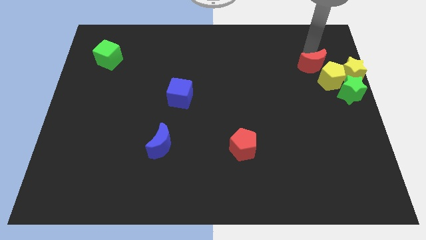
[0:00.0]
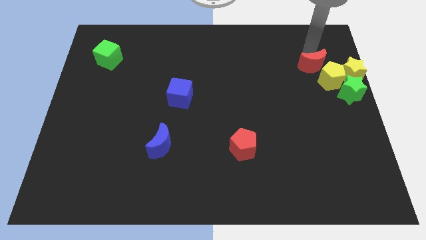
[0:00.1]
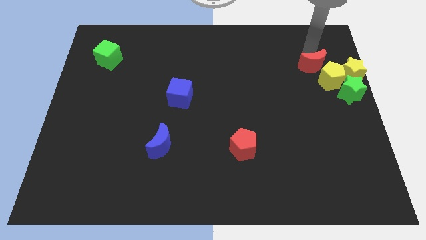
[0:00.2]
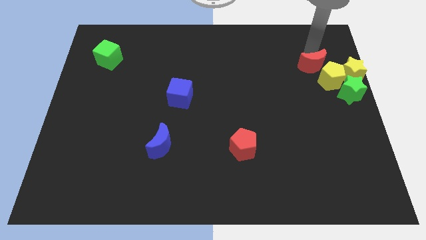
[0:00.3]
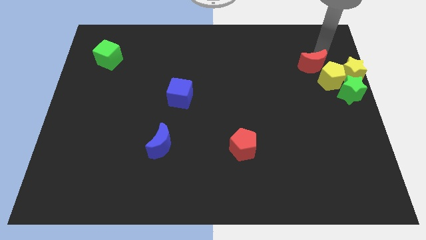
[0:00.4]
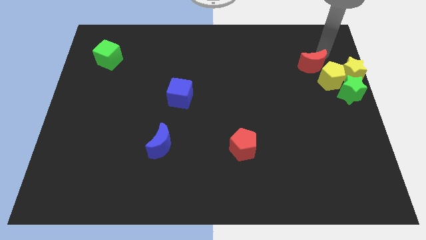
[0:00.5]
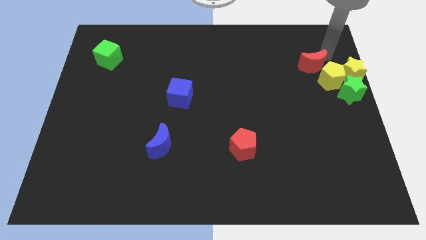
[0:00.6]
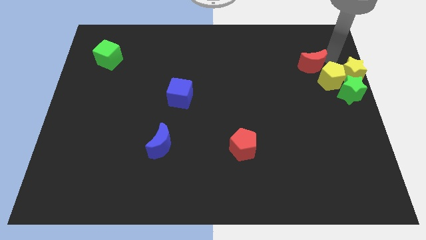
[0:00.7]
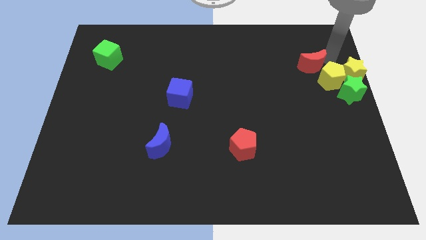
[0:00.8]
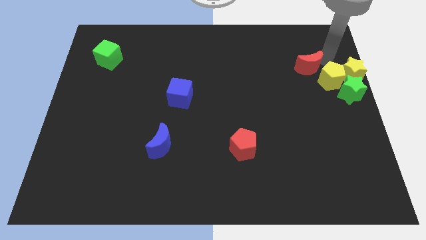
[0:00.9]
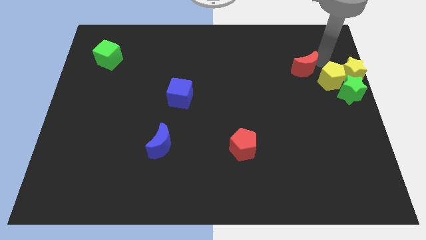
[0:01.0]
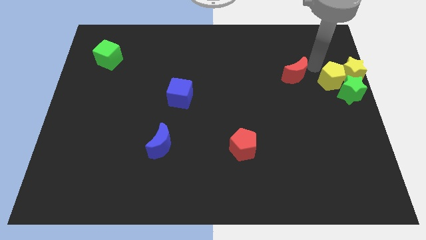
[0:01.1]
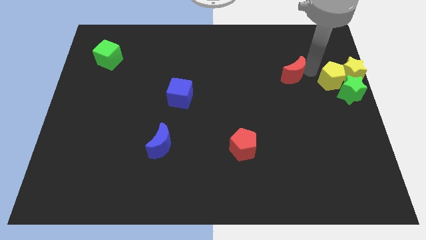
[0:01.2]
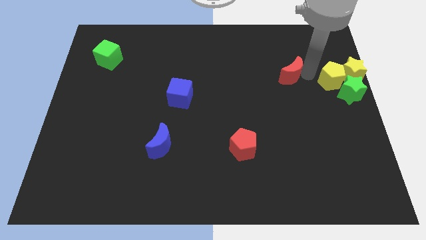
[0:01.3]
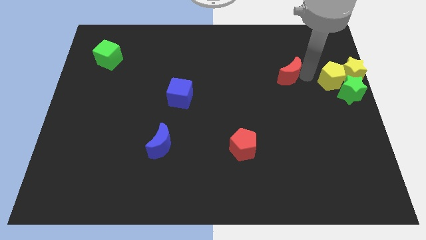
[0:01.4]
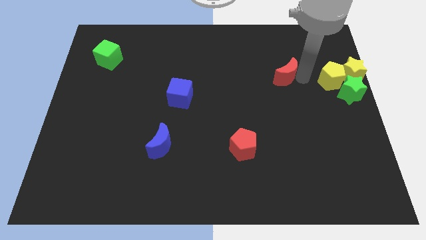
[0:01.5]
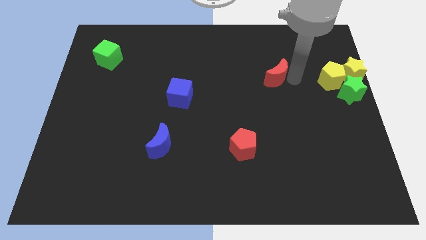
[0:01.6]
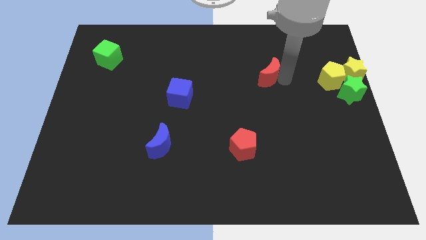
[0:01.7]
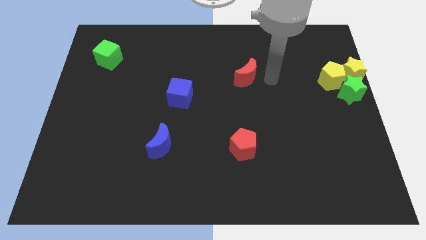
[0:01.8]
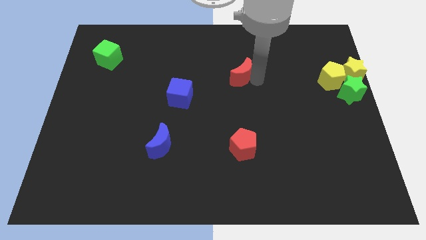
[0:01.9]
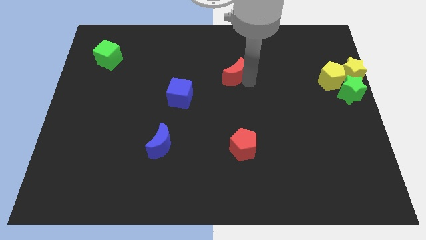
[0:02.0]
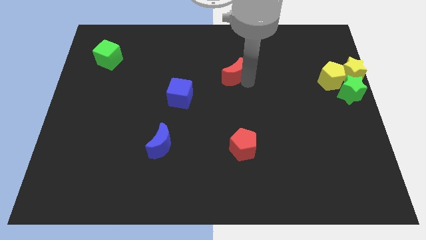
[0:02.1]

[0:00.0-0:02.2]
slide red moon diagonal to blue cube

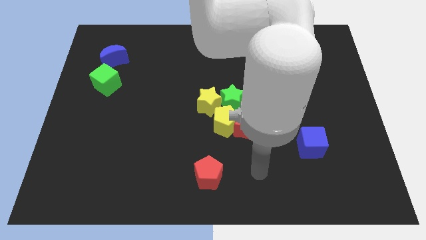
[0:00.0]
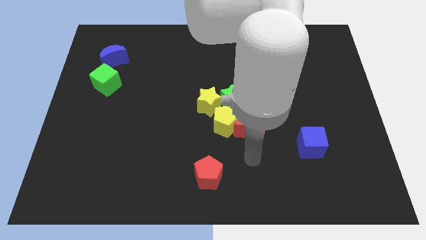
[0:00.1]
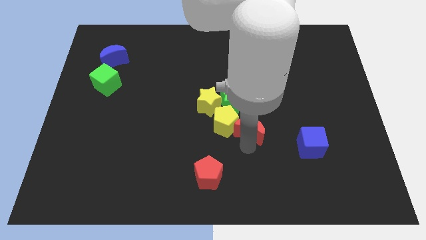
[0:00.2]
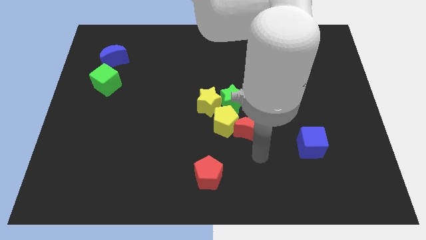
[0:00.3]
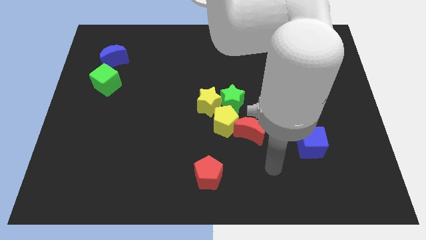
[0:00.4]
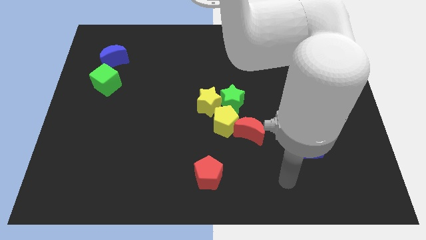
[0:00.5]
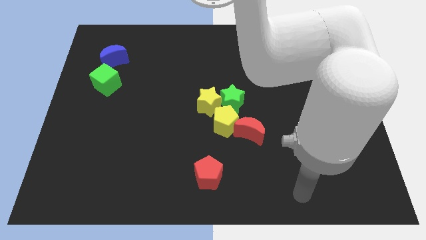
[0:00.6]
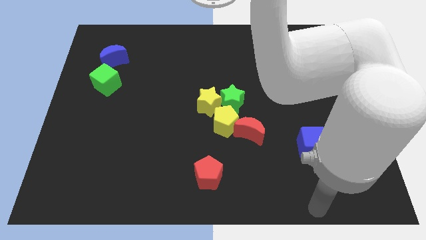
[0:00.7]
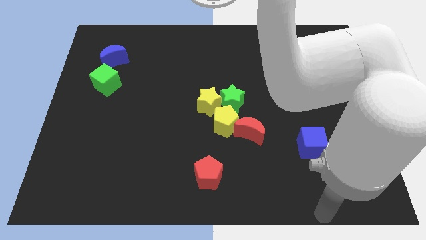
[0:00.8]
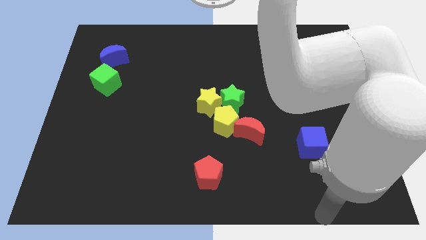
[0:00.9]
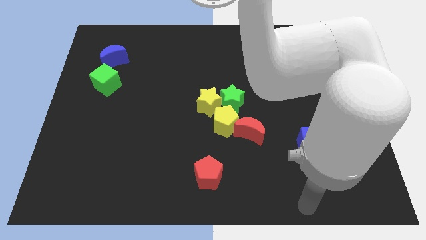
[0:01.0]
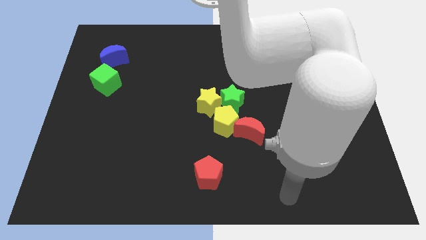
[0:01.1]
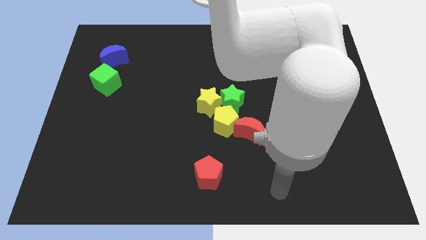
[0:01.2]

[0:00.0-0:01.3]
move your arm to the bottom of the board

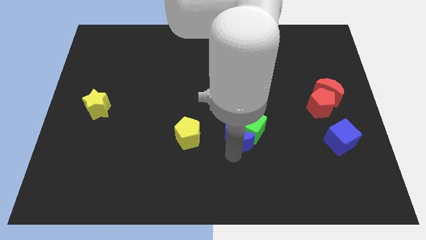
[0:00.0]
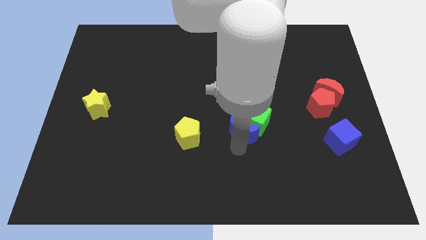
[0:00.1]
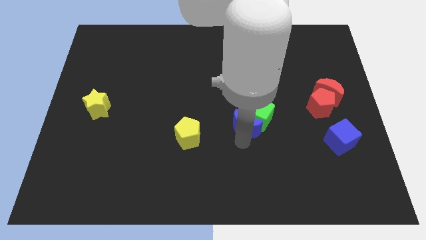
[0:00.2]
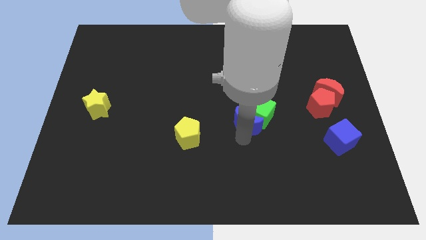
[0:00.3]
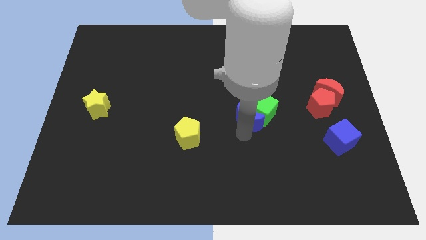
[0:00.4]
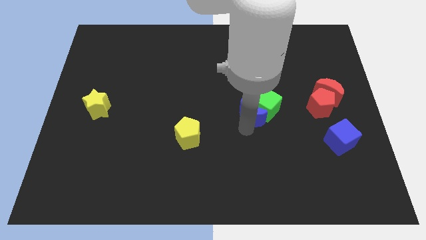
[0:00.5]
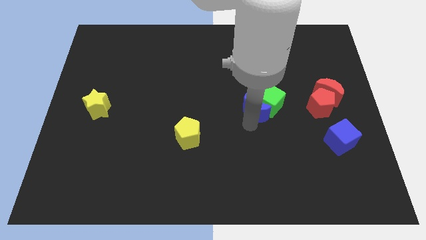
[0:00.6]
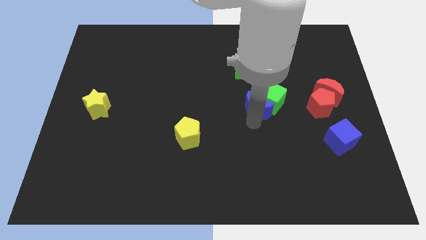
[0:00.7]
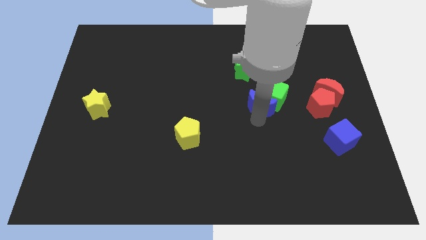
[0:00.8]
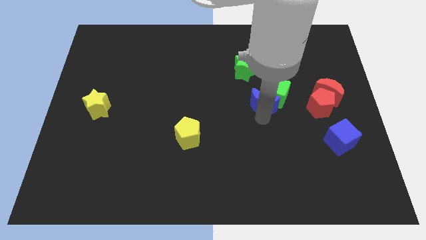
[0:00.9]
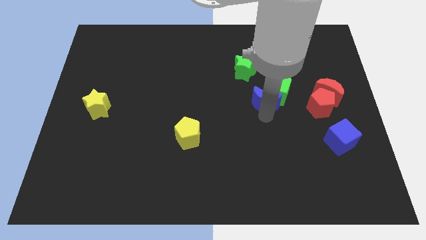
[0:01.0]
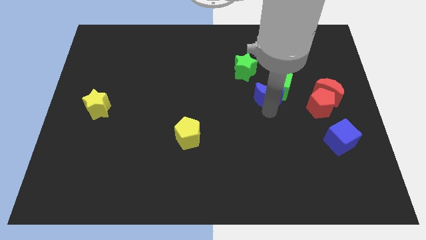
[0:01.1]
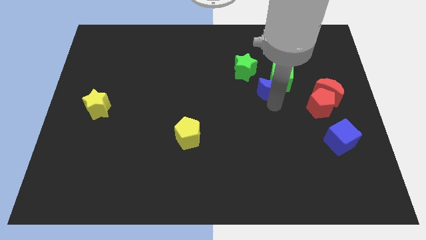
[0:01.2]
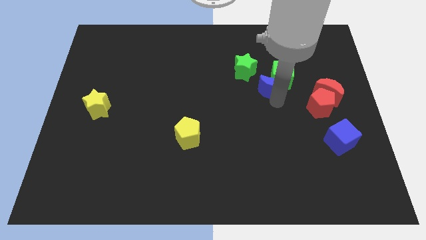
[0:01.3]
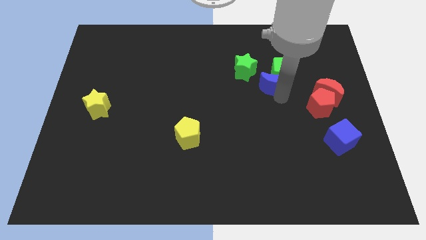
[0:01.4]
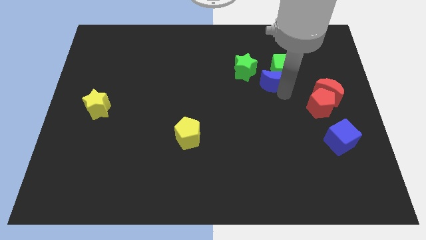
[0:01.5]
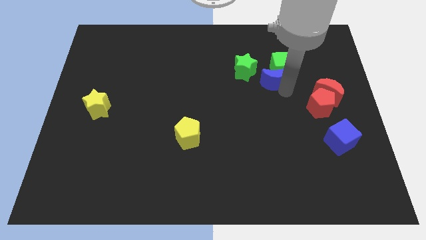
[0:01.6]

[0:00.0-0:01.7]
place the group of blocks to the right of the green star

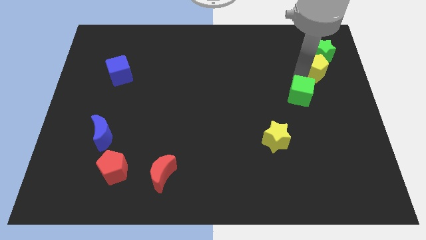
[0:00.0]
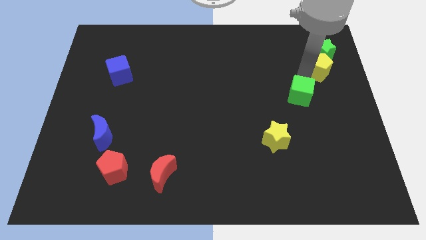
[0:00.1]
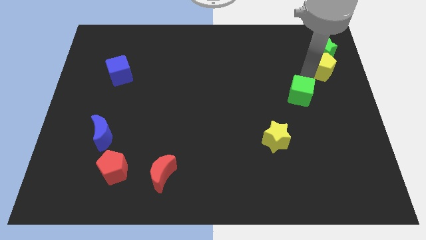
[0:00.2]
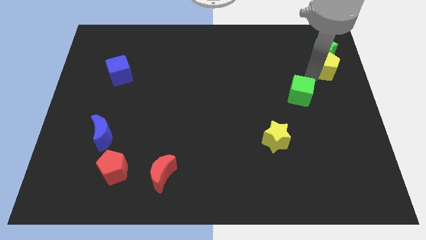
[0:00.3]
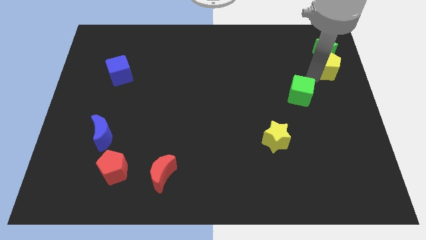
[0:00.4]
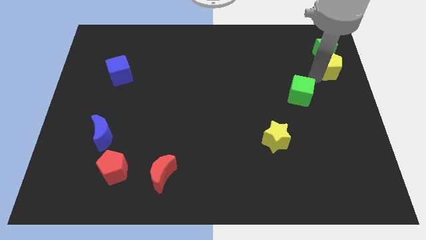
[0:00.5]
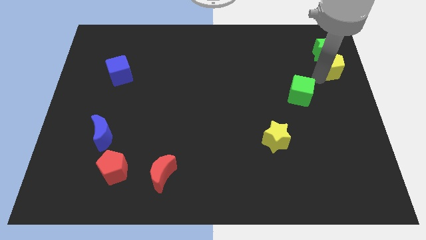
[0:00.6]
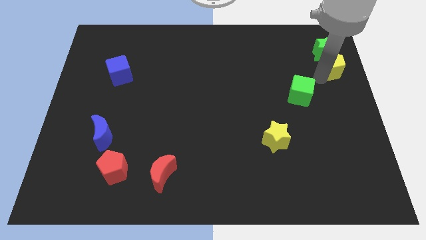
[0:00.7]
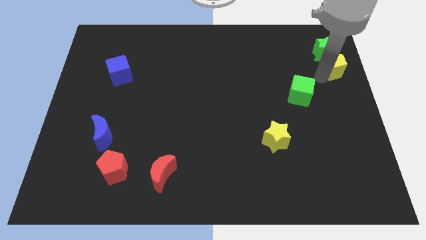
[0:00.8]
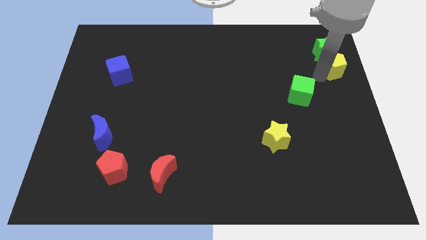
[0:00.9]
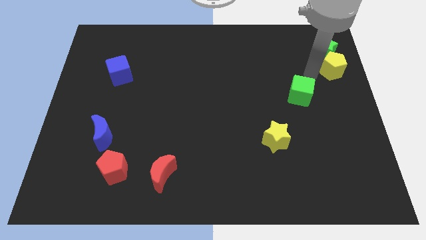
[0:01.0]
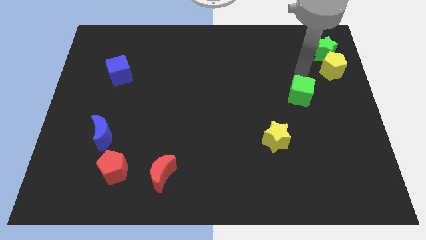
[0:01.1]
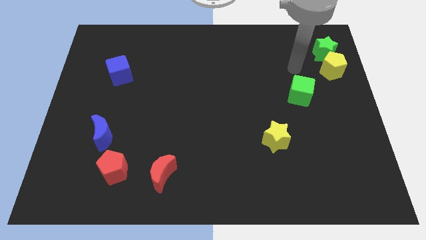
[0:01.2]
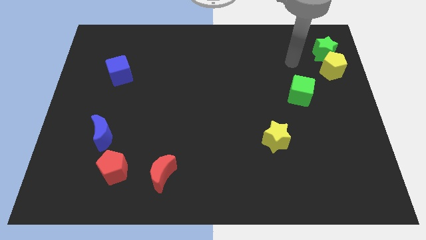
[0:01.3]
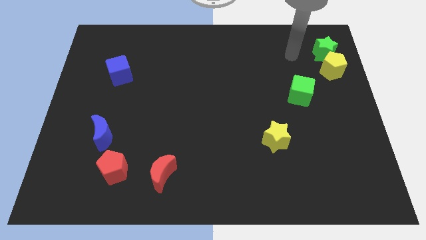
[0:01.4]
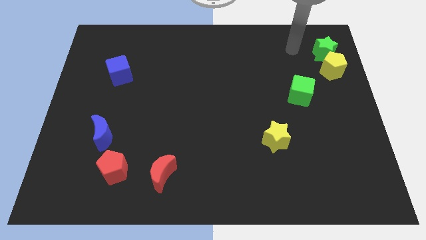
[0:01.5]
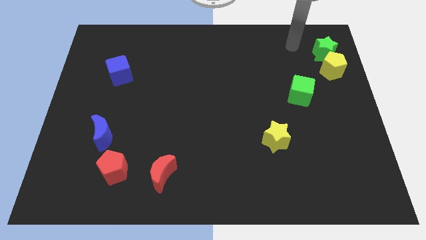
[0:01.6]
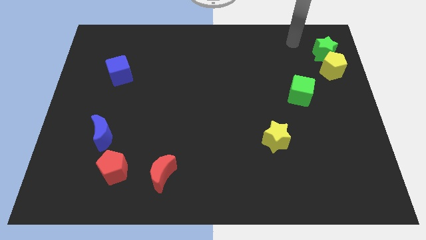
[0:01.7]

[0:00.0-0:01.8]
push the yellow pentagon into the green star

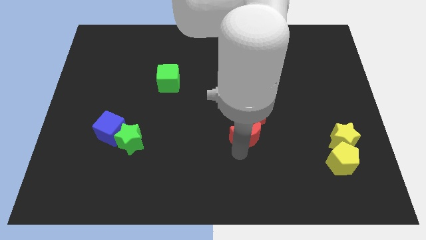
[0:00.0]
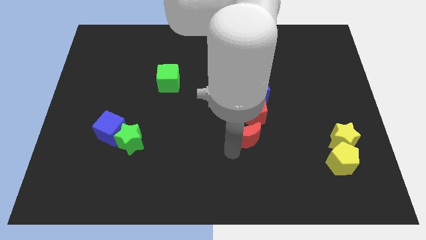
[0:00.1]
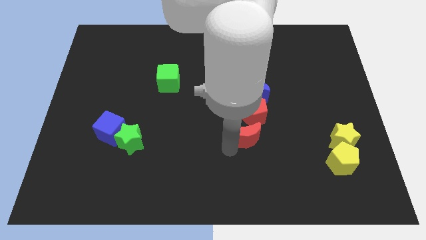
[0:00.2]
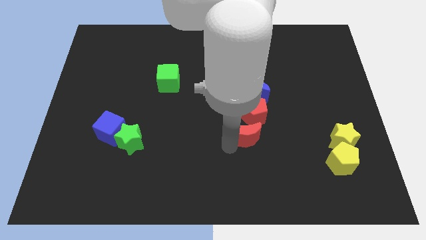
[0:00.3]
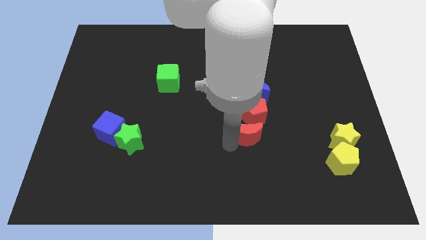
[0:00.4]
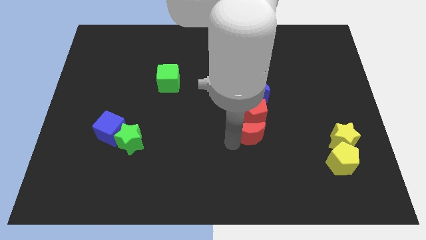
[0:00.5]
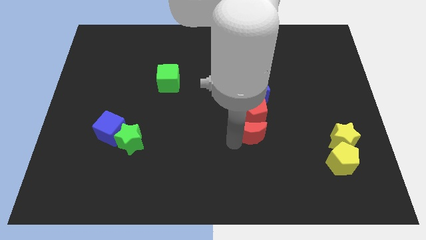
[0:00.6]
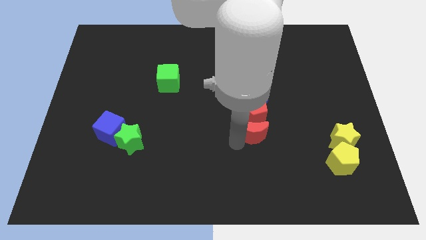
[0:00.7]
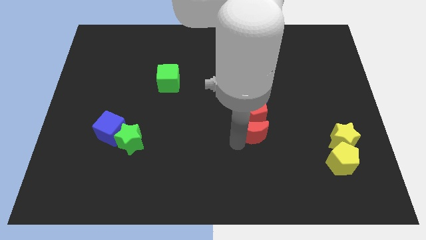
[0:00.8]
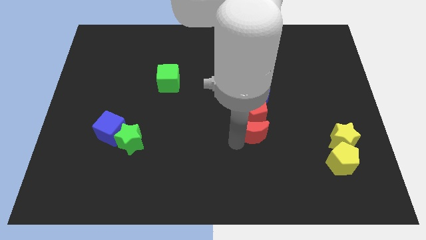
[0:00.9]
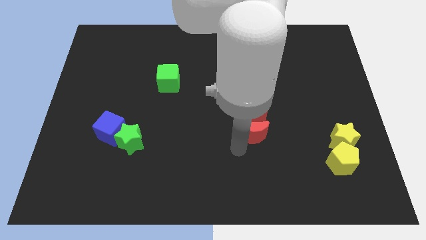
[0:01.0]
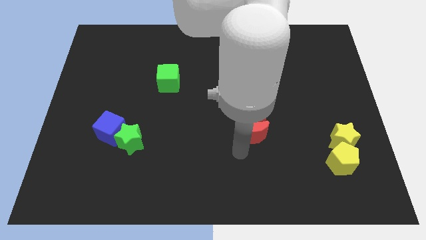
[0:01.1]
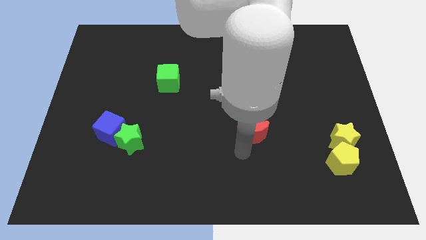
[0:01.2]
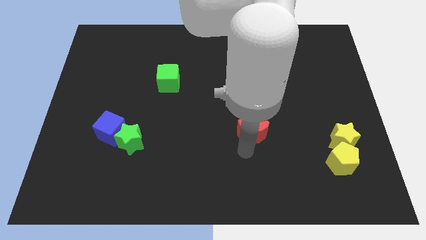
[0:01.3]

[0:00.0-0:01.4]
push red moon into red pentagon

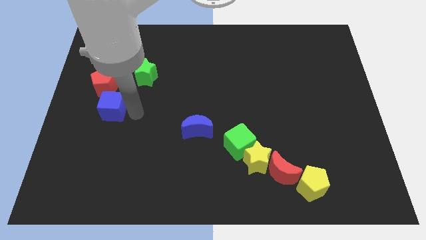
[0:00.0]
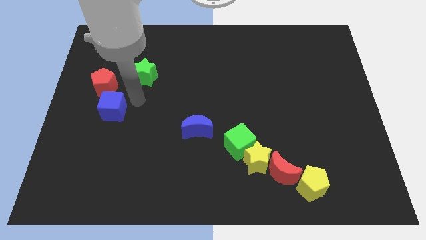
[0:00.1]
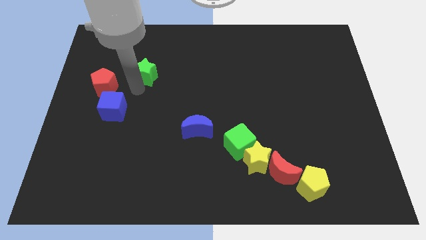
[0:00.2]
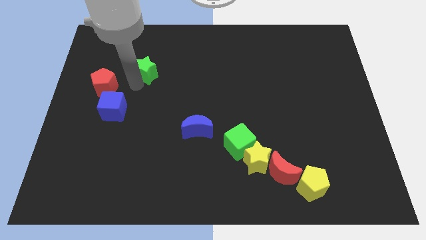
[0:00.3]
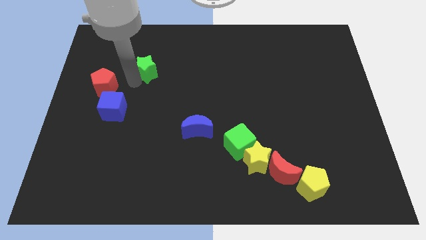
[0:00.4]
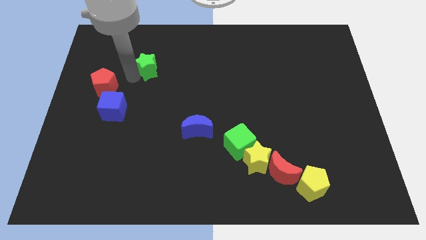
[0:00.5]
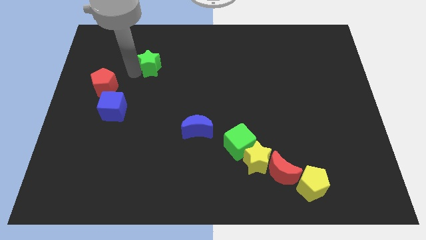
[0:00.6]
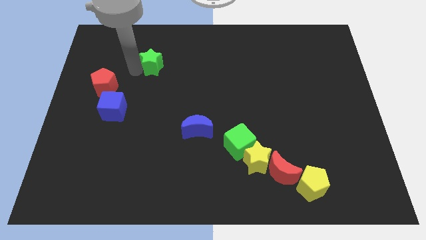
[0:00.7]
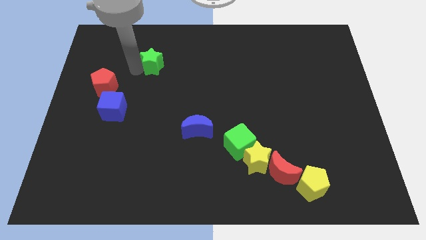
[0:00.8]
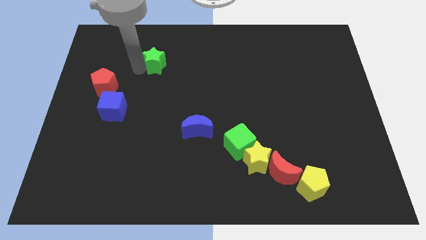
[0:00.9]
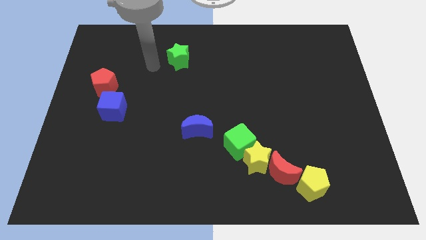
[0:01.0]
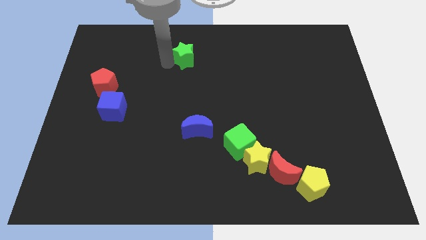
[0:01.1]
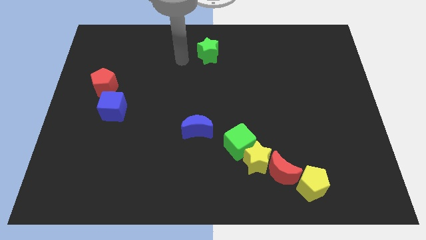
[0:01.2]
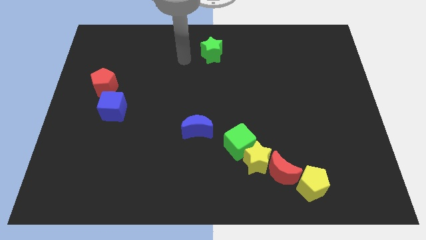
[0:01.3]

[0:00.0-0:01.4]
place the green star at the top center of the board
